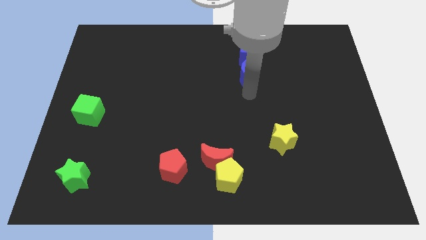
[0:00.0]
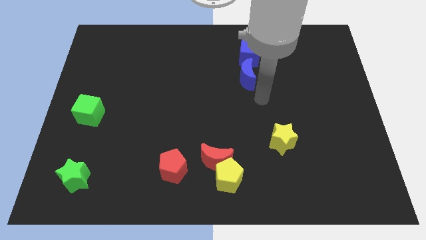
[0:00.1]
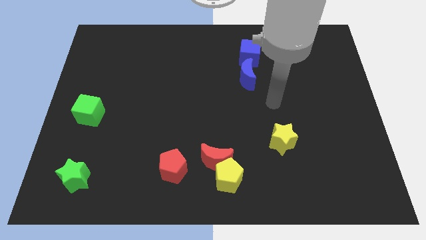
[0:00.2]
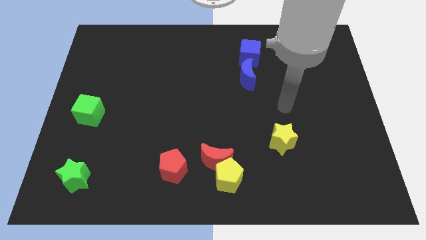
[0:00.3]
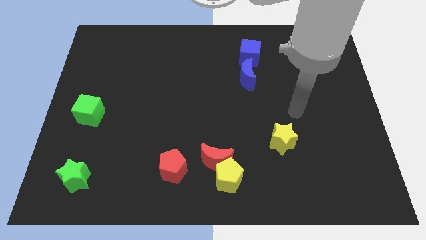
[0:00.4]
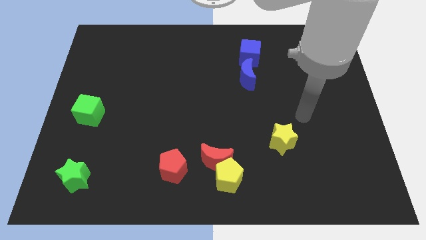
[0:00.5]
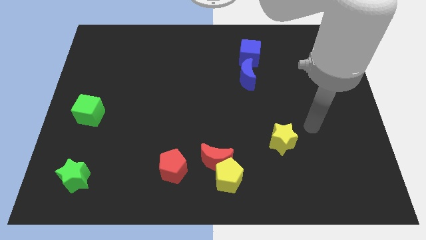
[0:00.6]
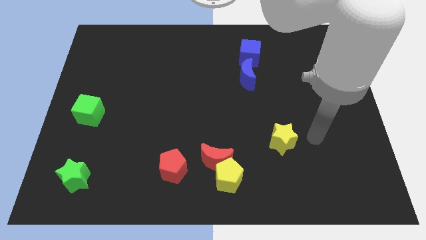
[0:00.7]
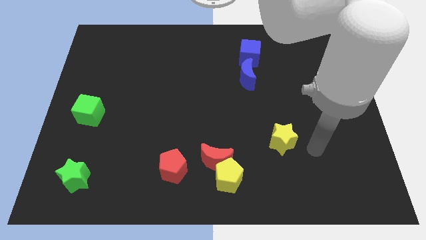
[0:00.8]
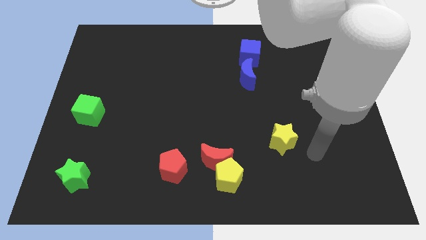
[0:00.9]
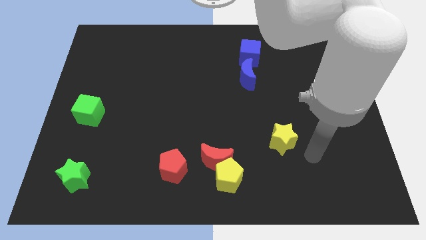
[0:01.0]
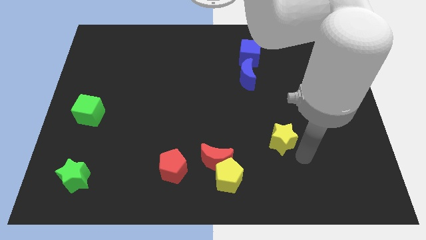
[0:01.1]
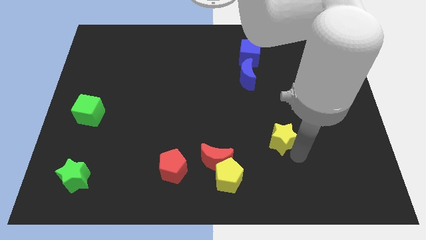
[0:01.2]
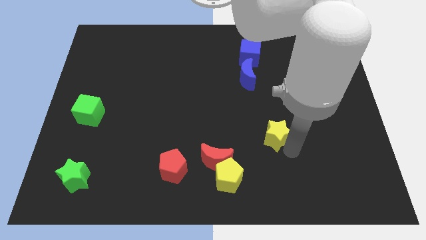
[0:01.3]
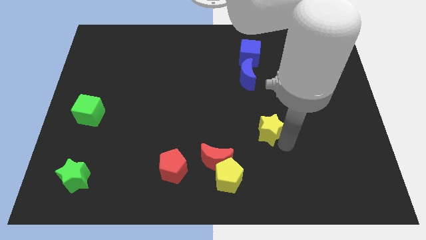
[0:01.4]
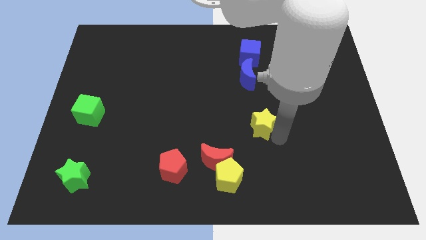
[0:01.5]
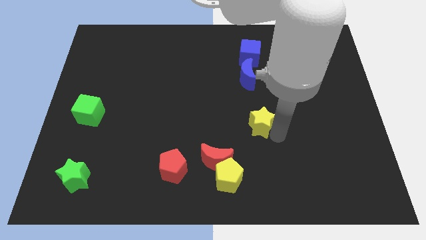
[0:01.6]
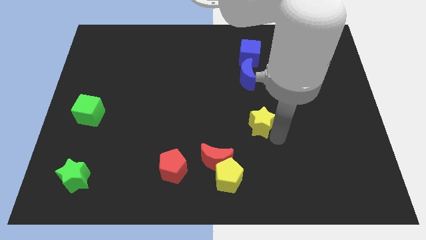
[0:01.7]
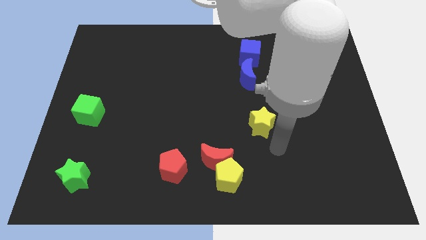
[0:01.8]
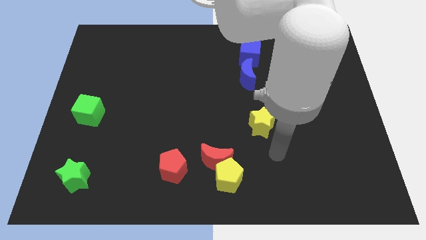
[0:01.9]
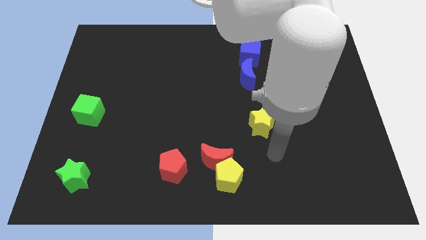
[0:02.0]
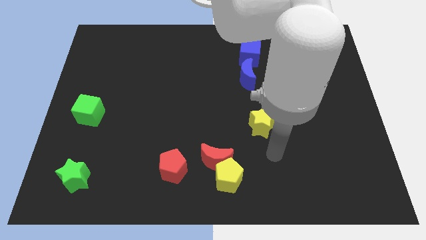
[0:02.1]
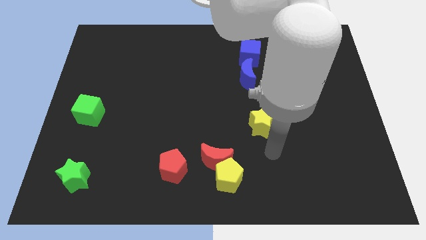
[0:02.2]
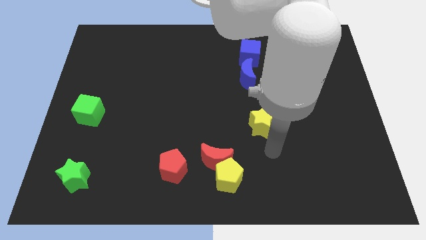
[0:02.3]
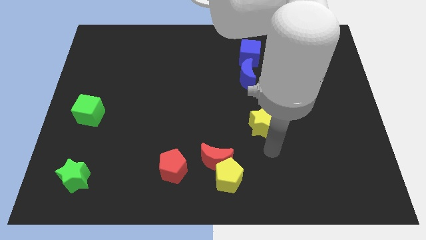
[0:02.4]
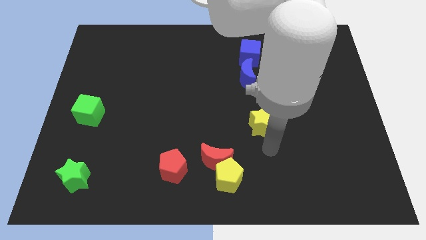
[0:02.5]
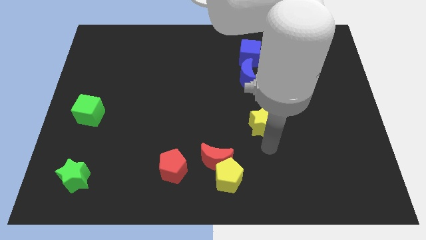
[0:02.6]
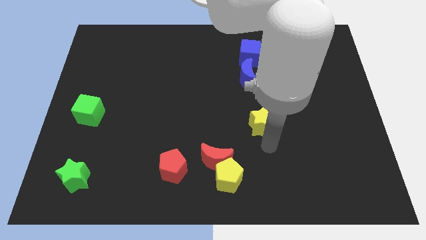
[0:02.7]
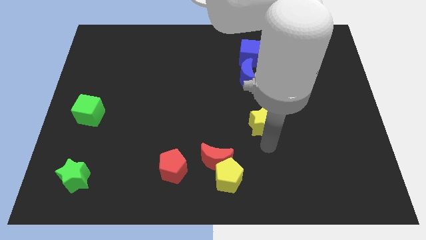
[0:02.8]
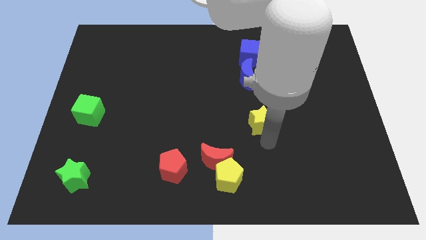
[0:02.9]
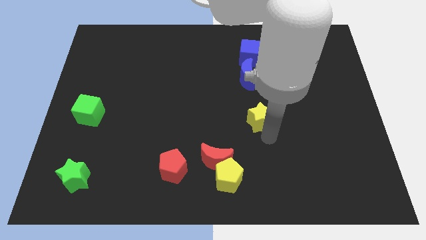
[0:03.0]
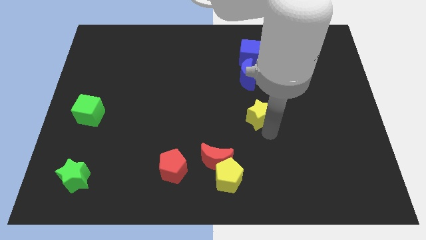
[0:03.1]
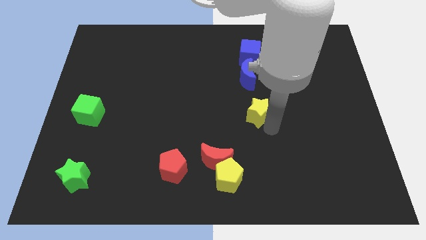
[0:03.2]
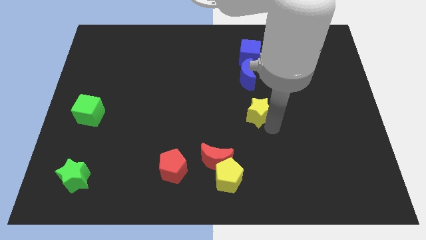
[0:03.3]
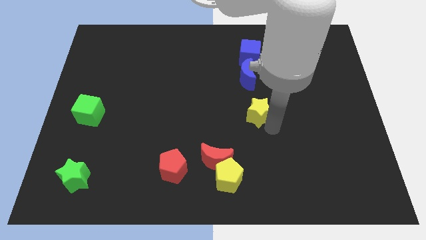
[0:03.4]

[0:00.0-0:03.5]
move the yellow star towards the bottom side of the blue crescent

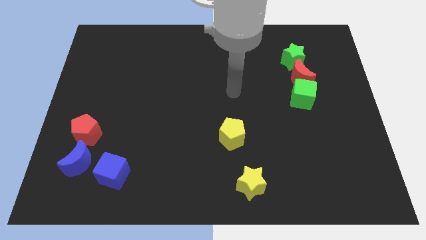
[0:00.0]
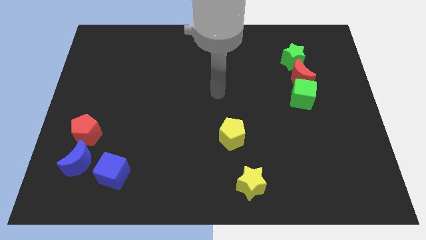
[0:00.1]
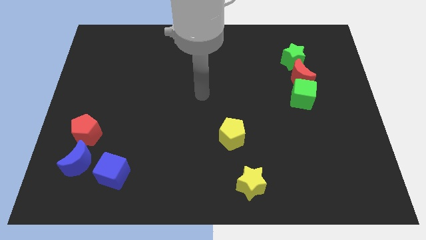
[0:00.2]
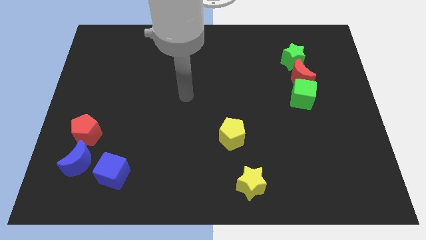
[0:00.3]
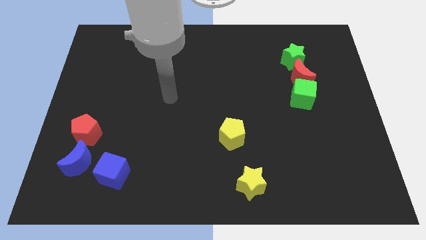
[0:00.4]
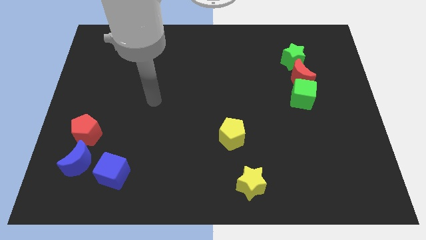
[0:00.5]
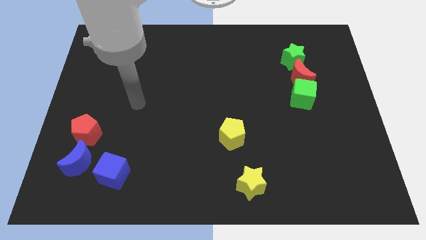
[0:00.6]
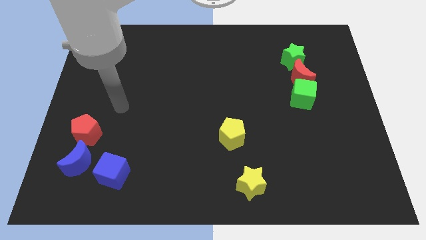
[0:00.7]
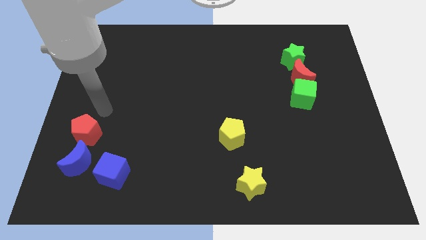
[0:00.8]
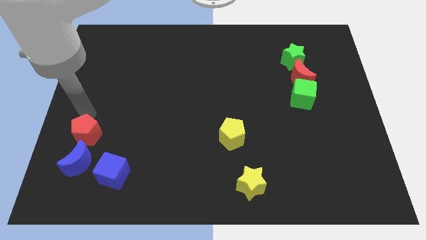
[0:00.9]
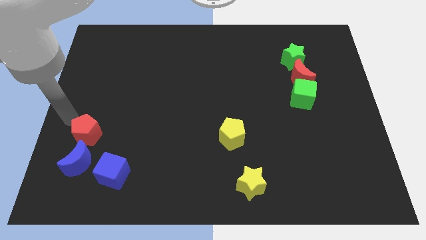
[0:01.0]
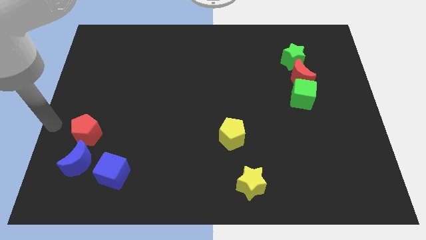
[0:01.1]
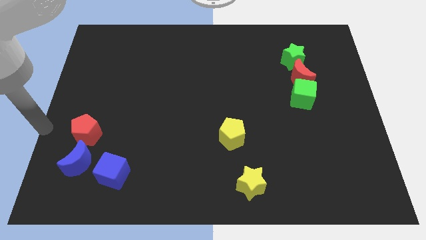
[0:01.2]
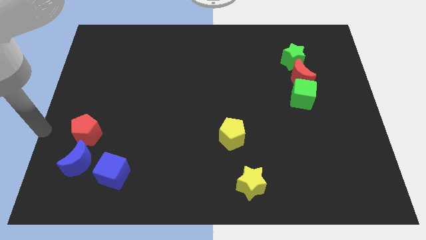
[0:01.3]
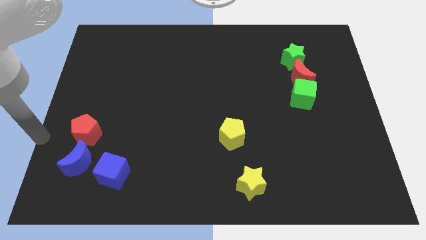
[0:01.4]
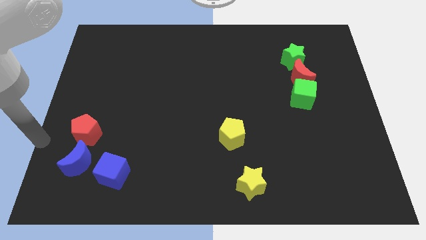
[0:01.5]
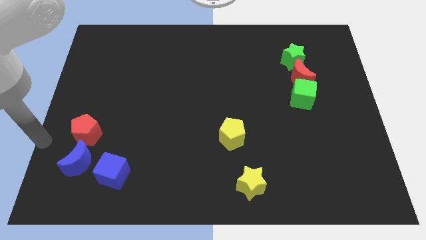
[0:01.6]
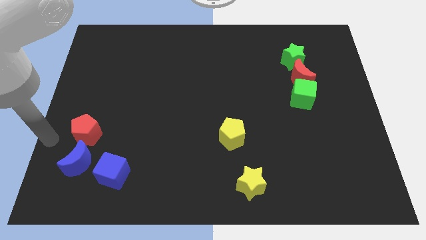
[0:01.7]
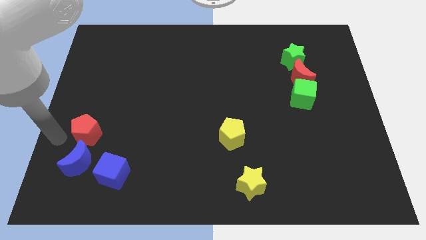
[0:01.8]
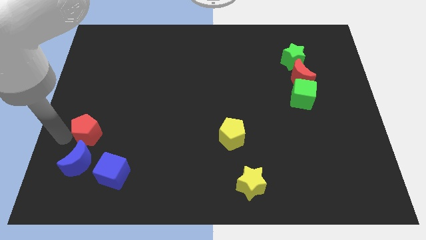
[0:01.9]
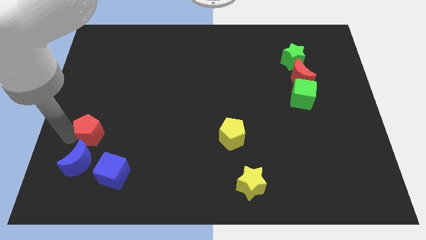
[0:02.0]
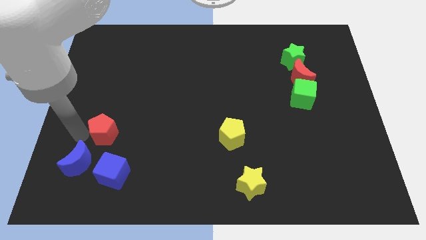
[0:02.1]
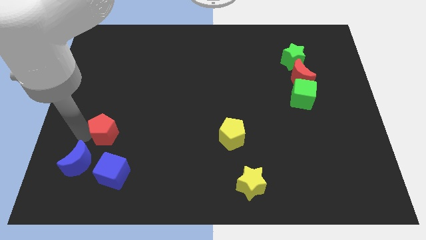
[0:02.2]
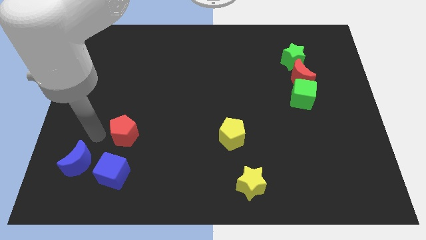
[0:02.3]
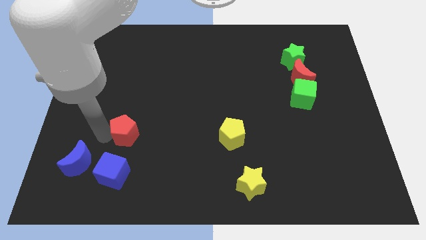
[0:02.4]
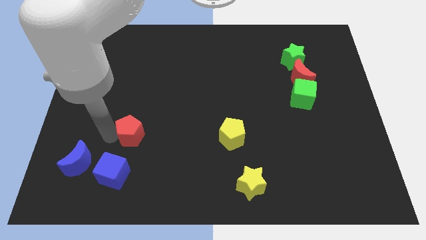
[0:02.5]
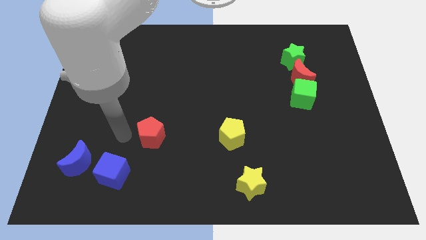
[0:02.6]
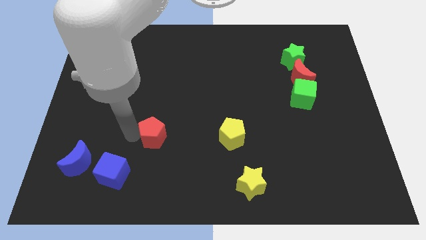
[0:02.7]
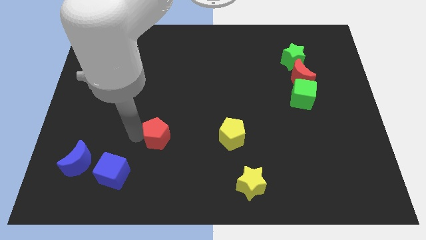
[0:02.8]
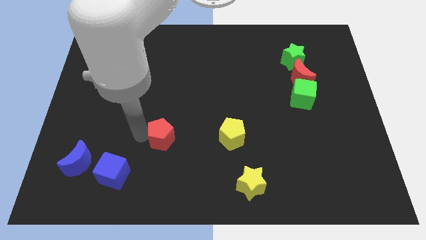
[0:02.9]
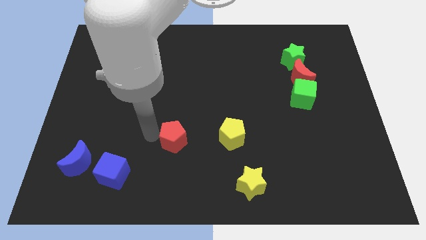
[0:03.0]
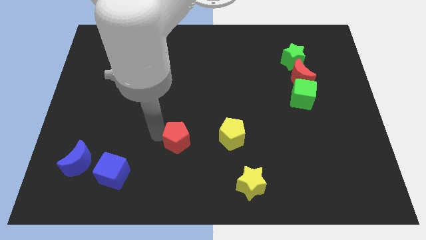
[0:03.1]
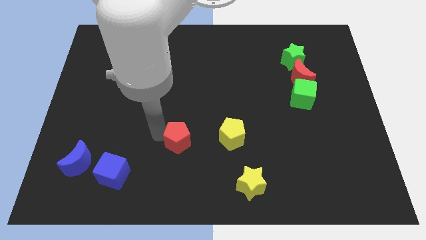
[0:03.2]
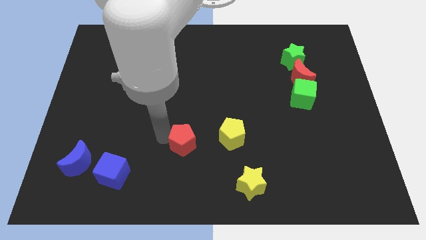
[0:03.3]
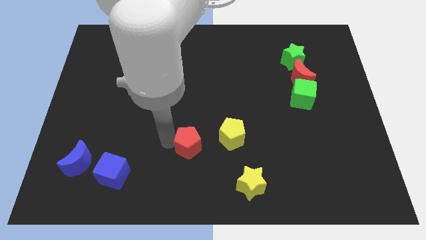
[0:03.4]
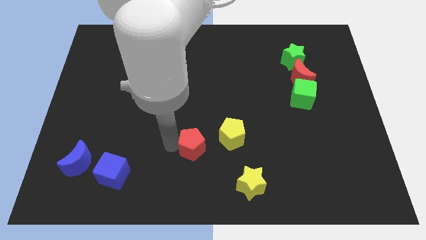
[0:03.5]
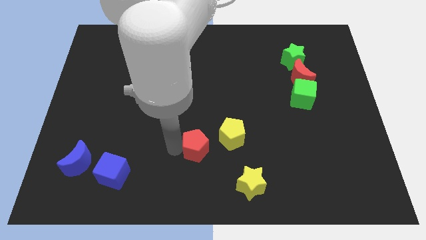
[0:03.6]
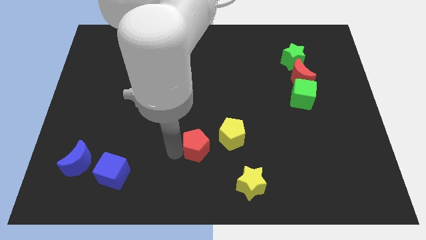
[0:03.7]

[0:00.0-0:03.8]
push the red pentagon to the left of the yellow pentagon

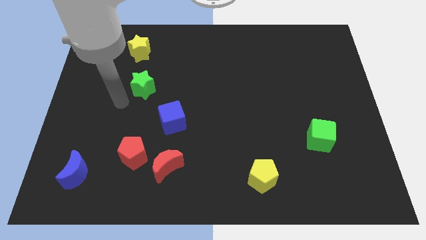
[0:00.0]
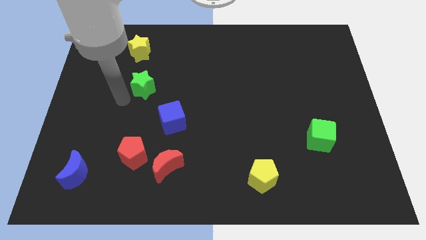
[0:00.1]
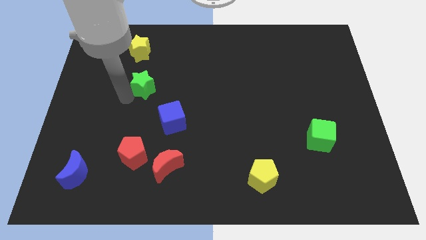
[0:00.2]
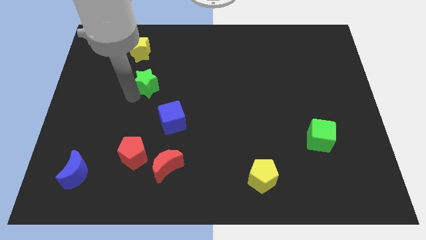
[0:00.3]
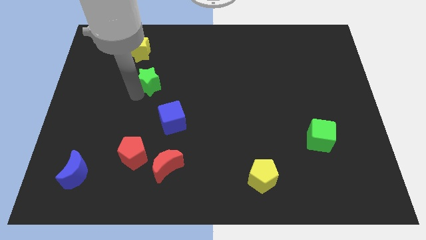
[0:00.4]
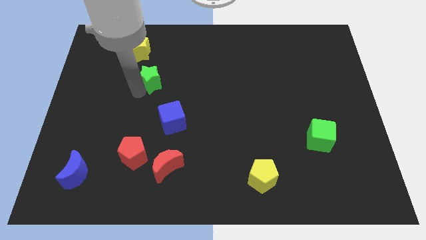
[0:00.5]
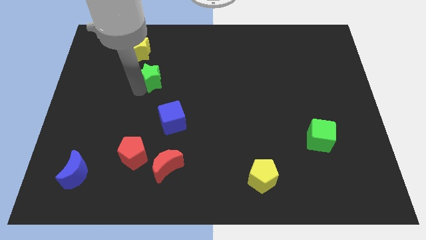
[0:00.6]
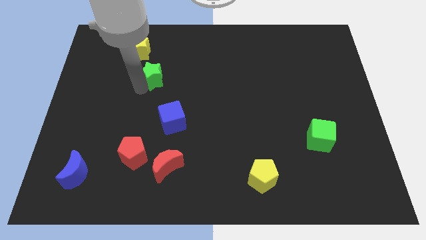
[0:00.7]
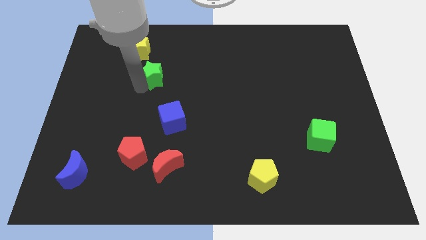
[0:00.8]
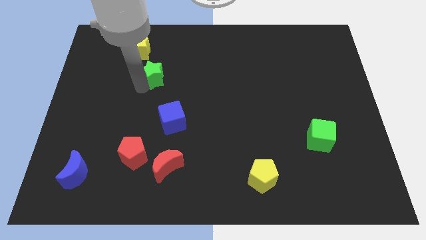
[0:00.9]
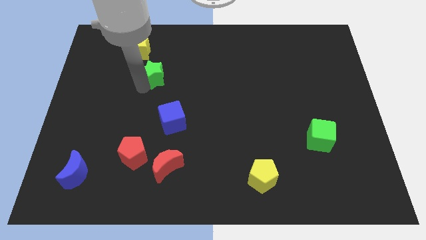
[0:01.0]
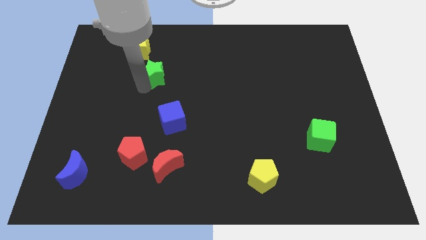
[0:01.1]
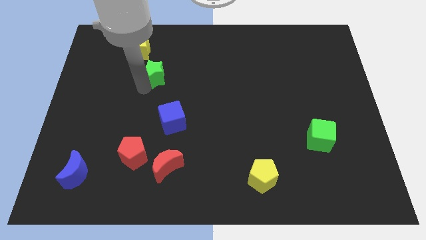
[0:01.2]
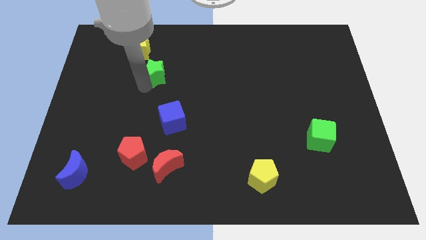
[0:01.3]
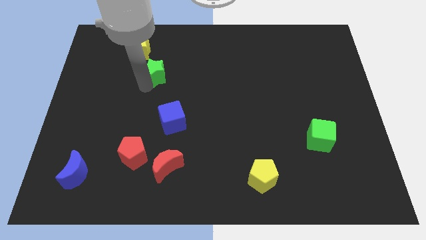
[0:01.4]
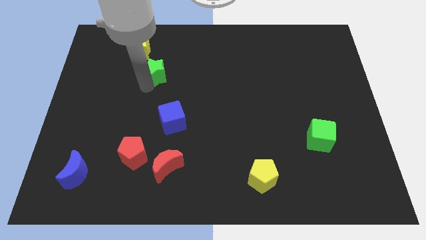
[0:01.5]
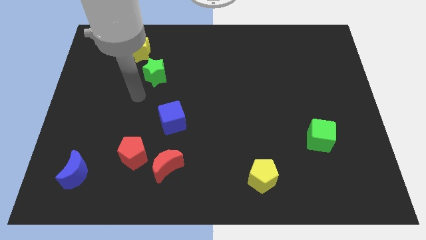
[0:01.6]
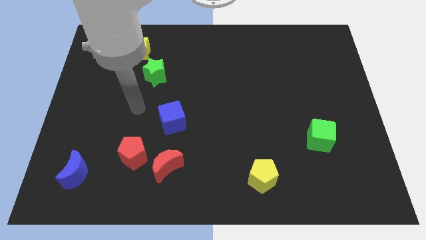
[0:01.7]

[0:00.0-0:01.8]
place the green star in between yellow star and blue cube
